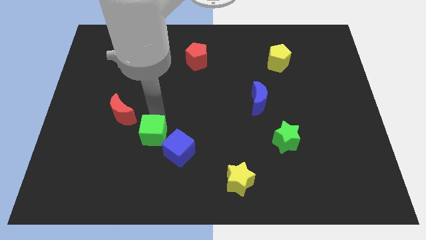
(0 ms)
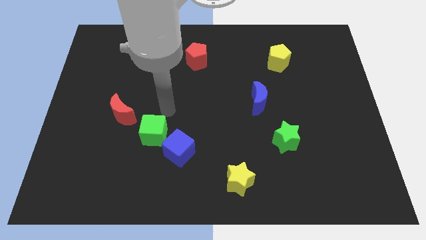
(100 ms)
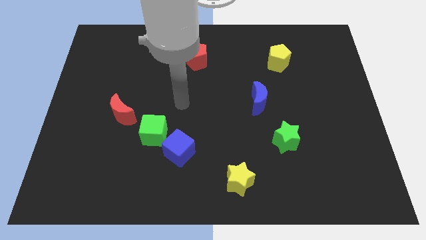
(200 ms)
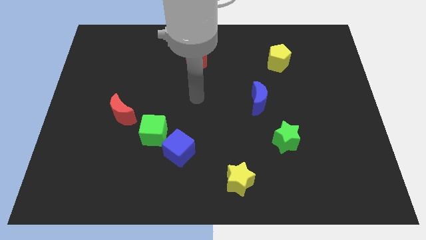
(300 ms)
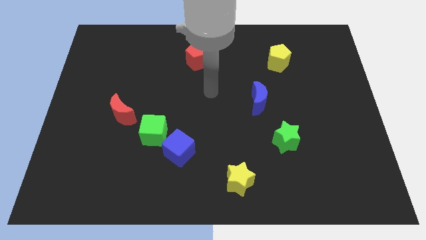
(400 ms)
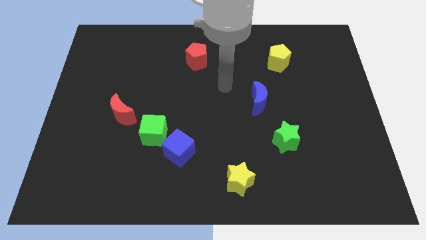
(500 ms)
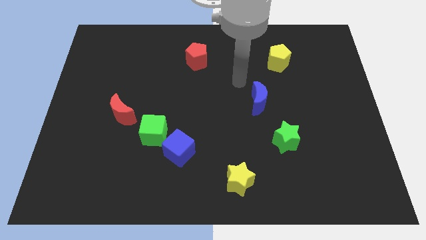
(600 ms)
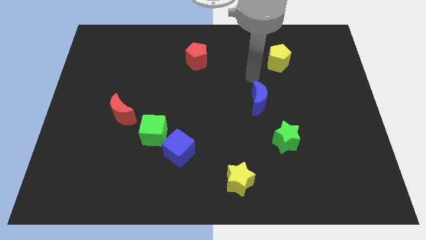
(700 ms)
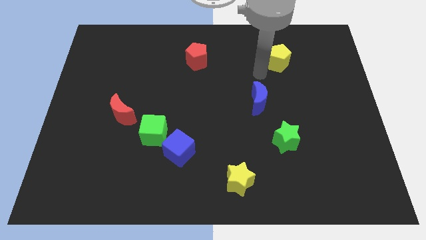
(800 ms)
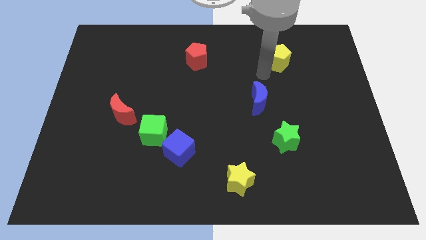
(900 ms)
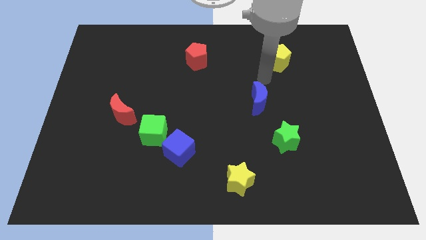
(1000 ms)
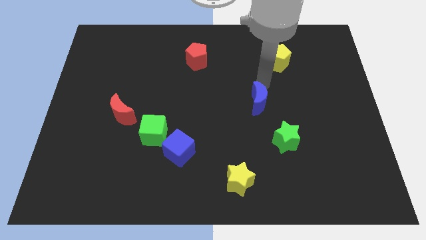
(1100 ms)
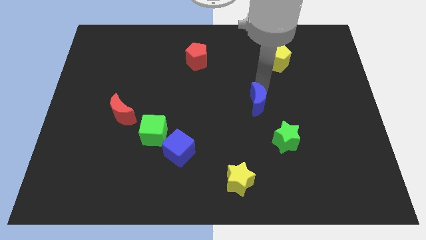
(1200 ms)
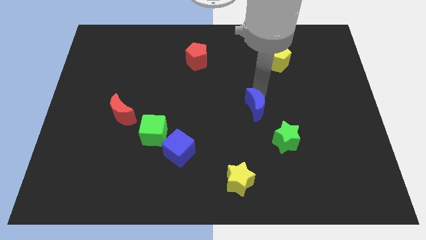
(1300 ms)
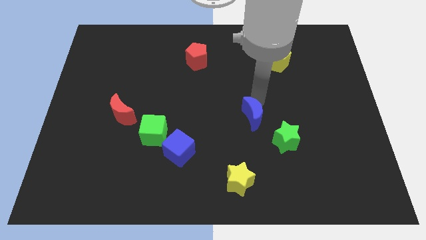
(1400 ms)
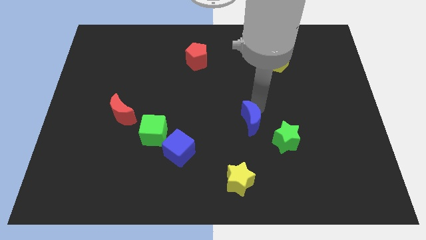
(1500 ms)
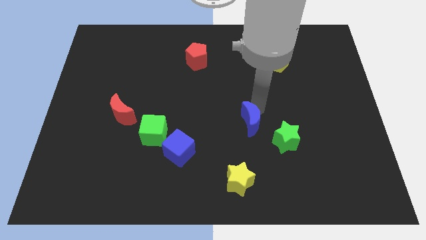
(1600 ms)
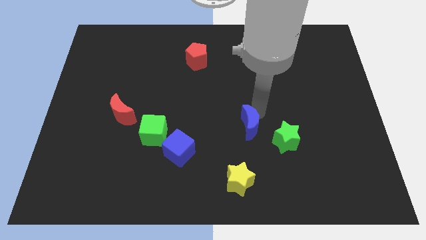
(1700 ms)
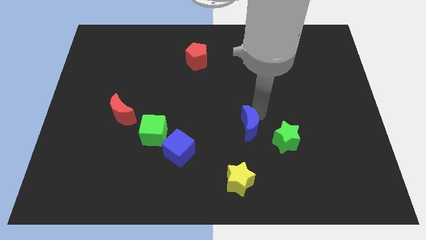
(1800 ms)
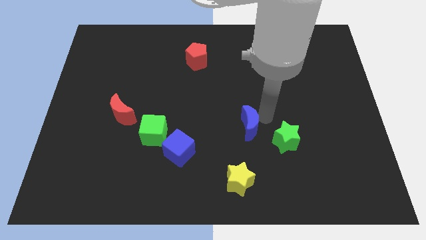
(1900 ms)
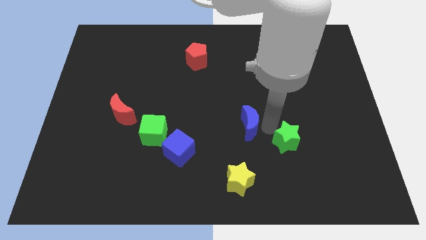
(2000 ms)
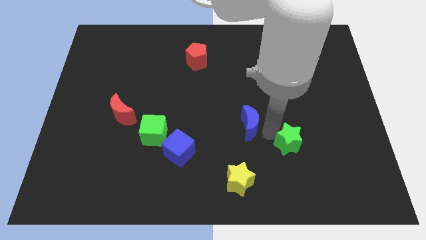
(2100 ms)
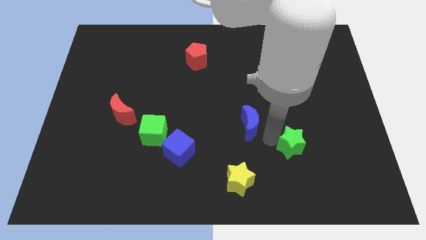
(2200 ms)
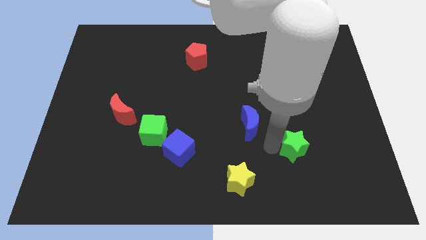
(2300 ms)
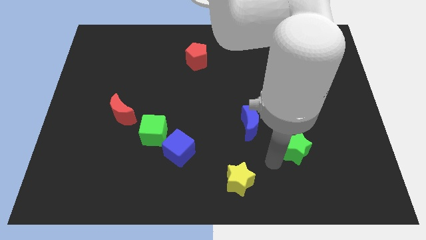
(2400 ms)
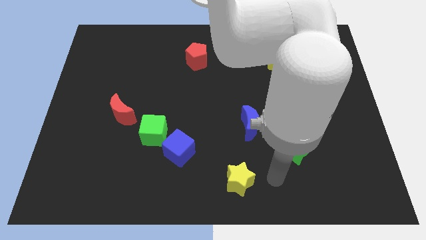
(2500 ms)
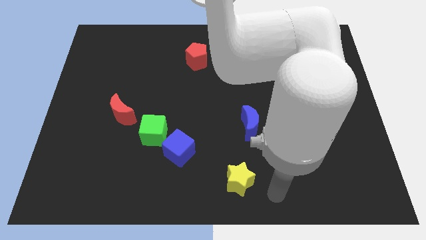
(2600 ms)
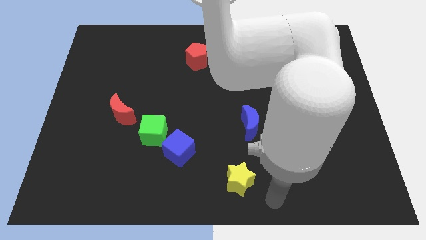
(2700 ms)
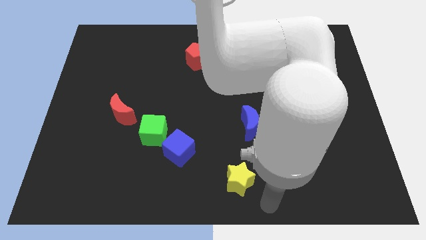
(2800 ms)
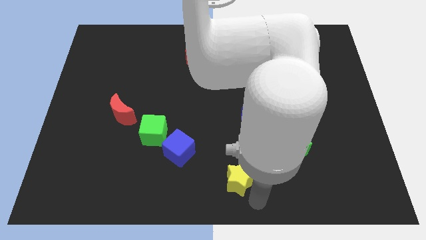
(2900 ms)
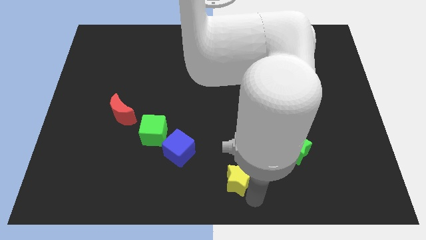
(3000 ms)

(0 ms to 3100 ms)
bring the blue crescent at the top side of the yellow star

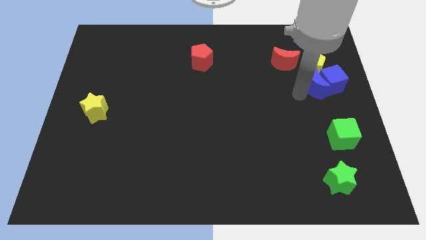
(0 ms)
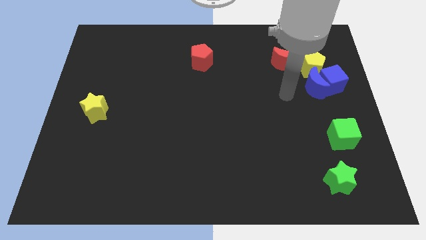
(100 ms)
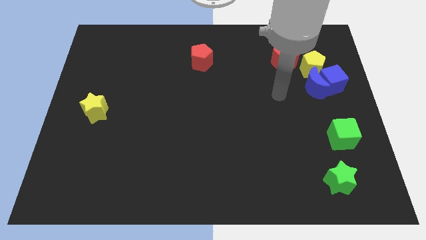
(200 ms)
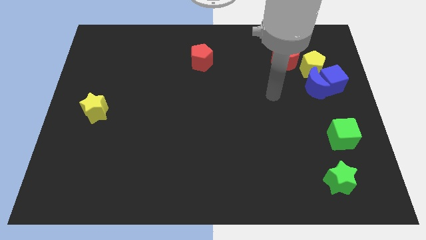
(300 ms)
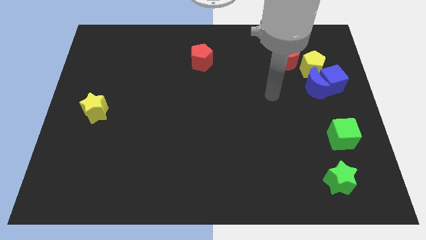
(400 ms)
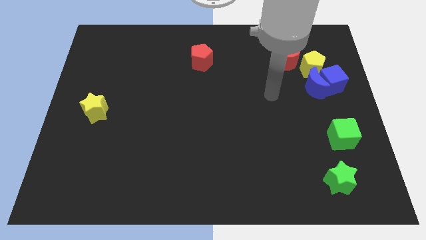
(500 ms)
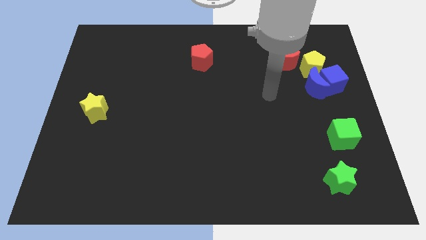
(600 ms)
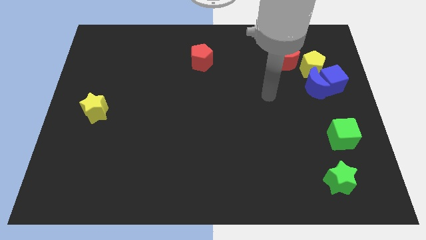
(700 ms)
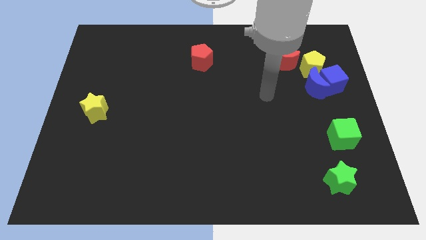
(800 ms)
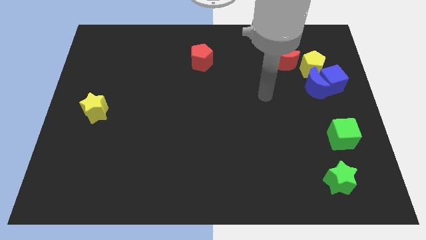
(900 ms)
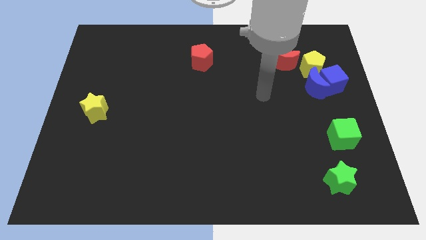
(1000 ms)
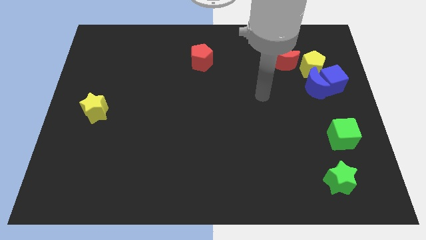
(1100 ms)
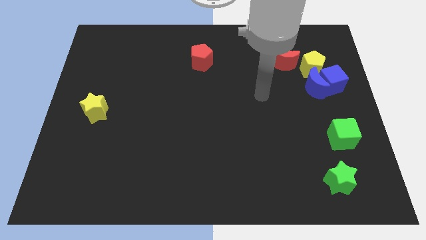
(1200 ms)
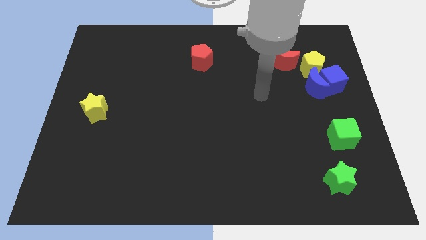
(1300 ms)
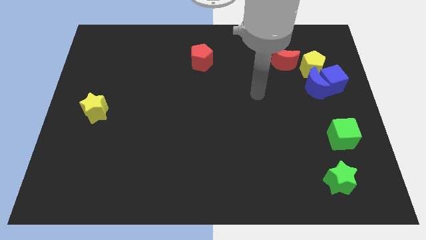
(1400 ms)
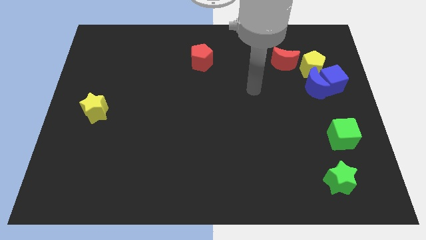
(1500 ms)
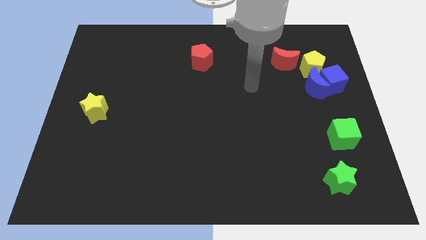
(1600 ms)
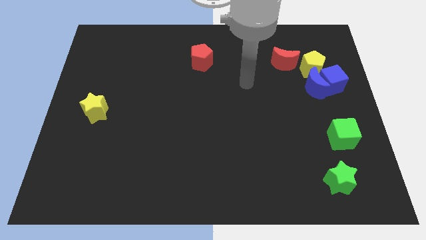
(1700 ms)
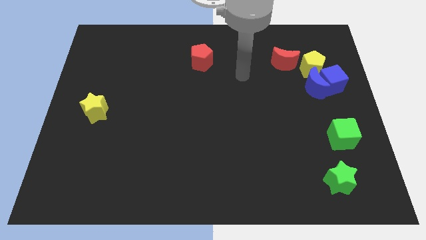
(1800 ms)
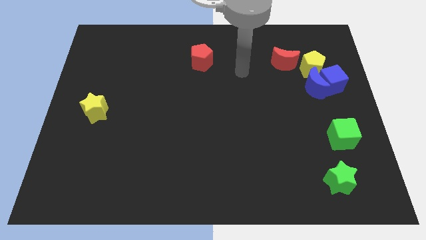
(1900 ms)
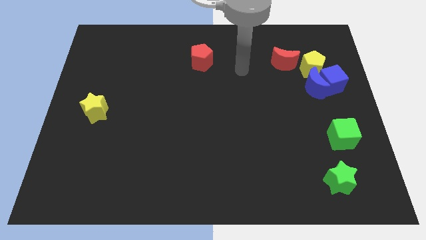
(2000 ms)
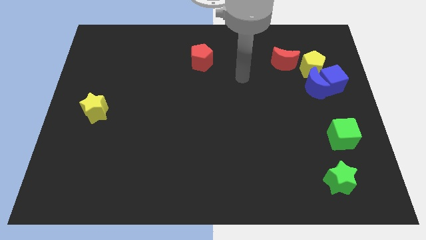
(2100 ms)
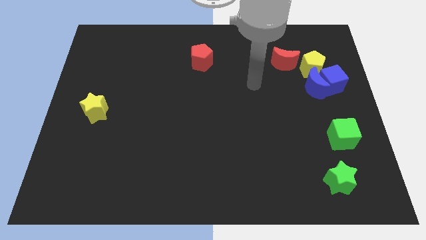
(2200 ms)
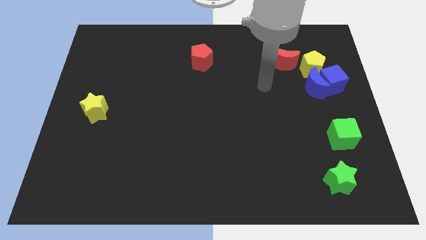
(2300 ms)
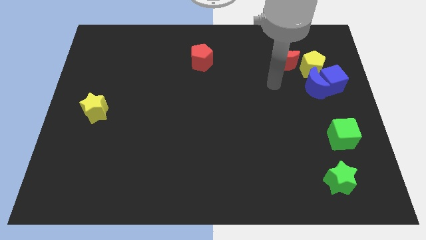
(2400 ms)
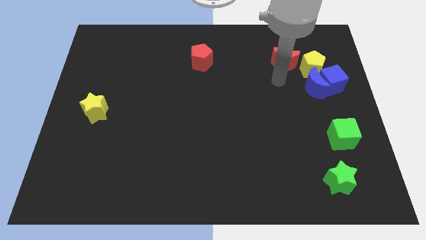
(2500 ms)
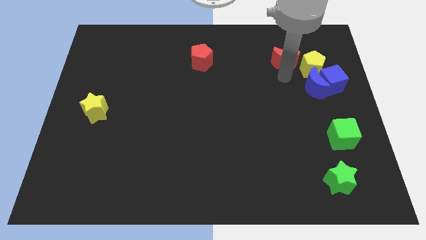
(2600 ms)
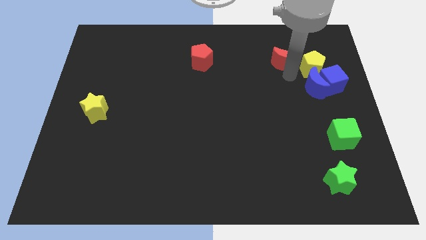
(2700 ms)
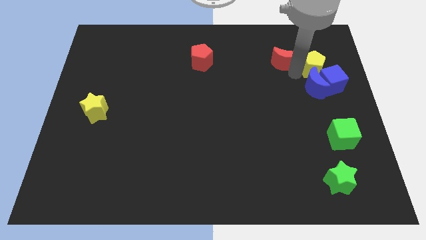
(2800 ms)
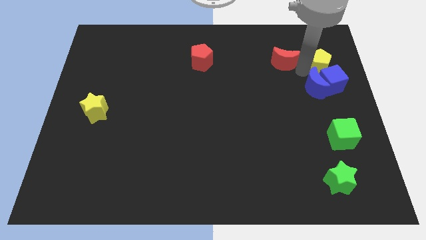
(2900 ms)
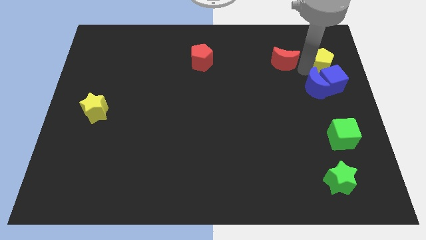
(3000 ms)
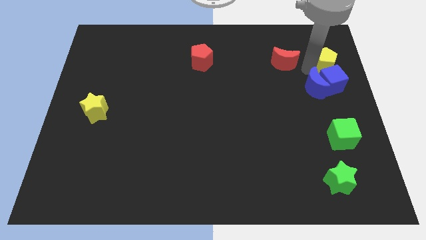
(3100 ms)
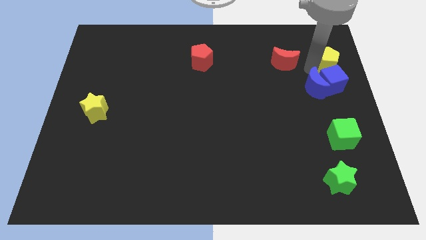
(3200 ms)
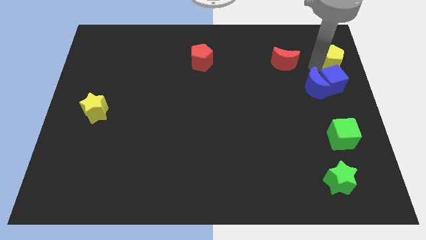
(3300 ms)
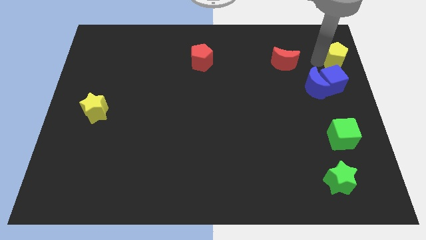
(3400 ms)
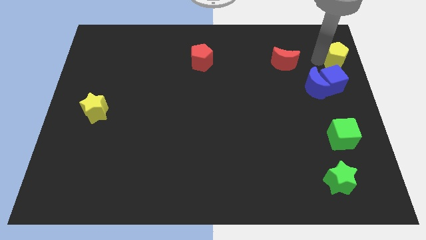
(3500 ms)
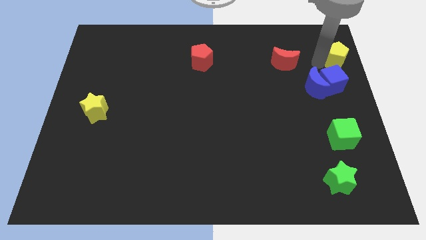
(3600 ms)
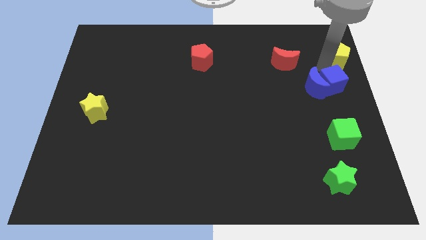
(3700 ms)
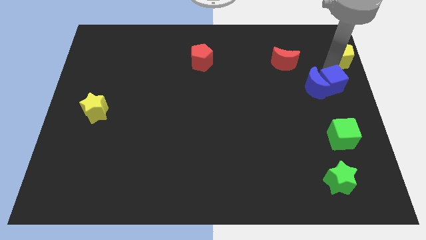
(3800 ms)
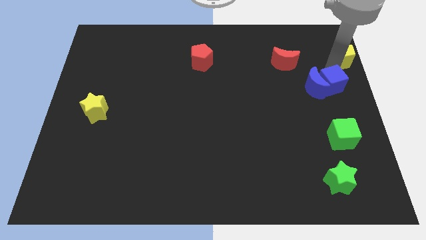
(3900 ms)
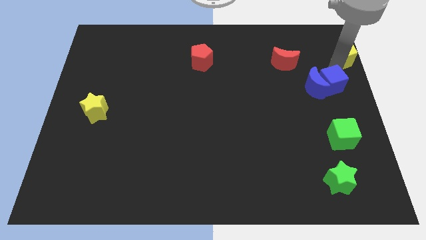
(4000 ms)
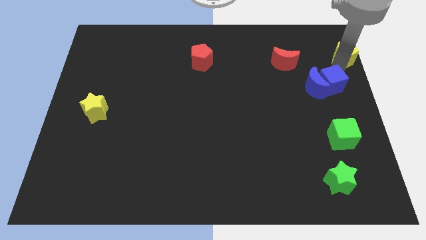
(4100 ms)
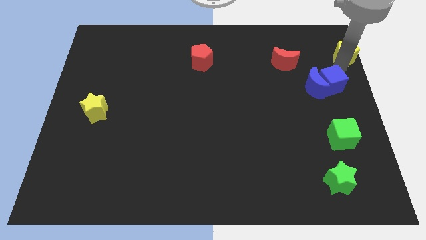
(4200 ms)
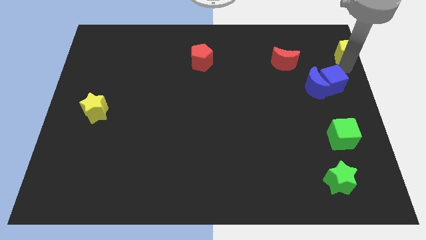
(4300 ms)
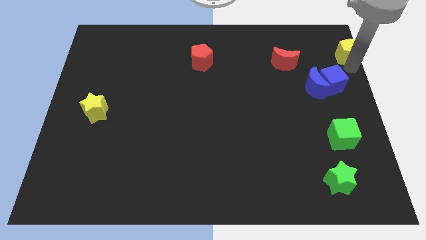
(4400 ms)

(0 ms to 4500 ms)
move the yellow pentagon to the top right of the blue cube

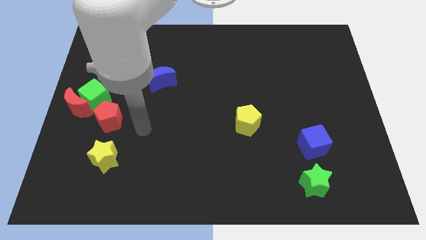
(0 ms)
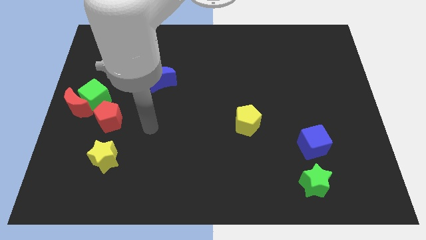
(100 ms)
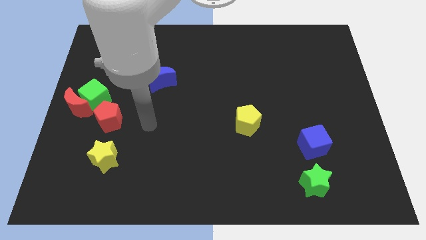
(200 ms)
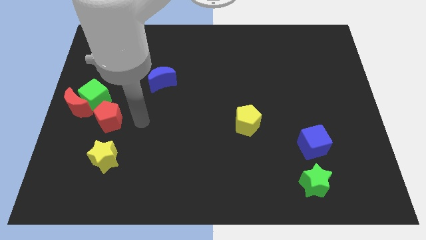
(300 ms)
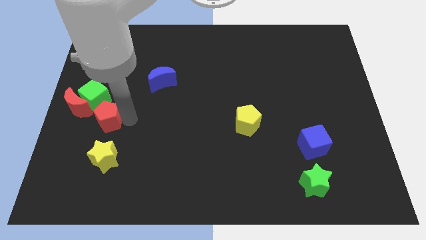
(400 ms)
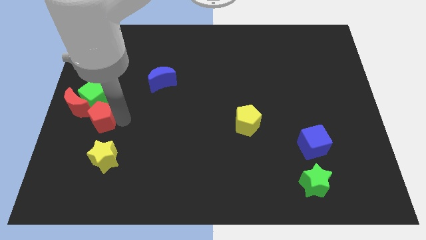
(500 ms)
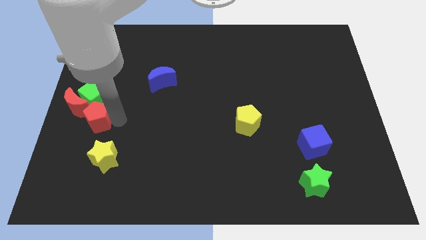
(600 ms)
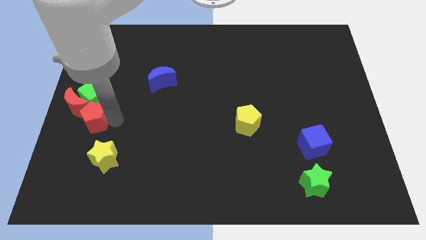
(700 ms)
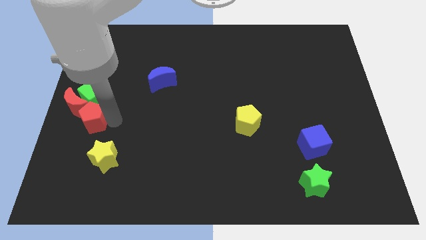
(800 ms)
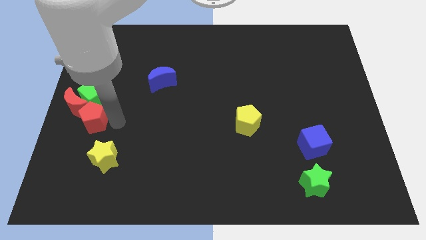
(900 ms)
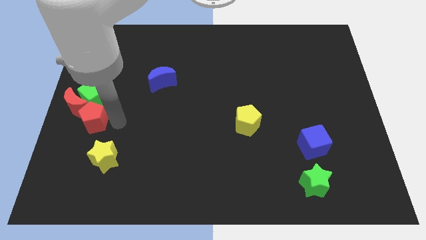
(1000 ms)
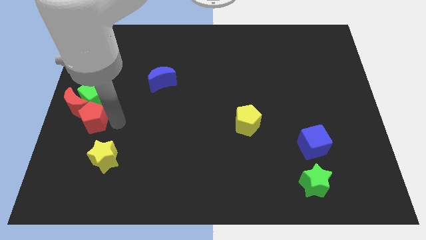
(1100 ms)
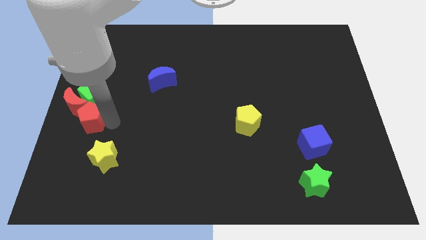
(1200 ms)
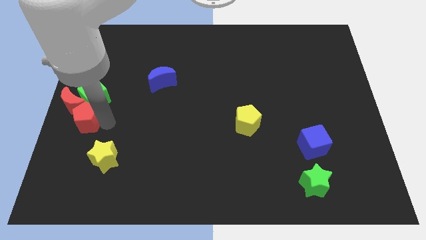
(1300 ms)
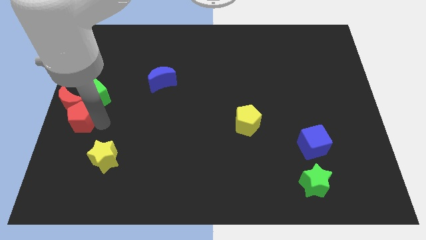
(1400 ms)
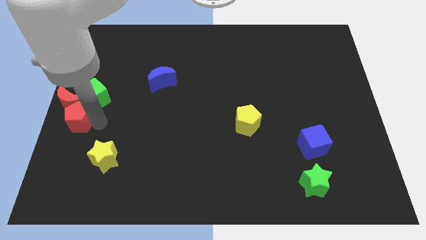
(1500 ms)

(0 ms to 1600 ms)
push the red pentagon into the red moon
